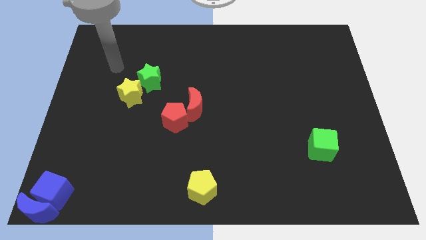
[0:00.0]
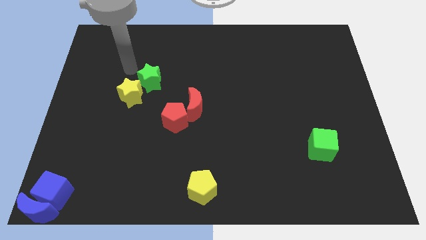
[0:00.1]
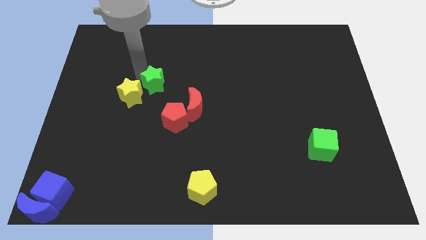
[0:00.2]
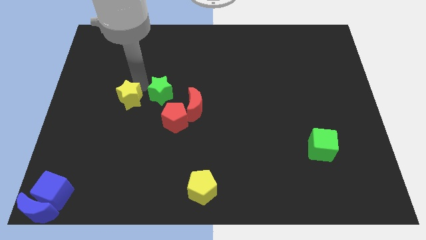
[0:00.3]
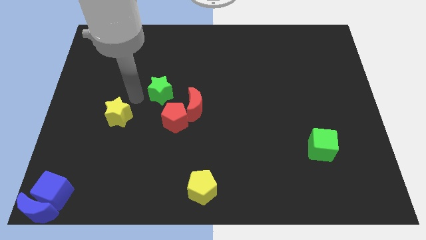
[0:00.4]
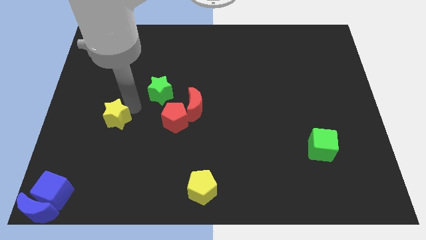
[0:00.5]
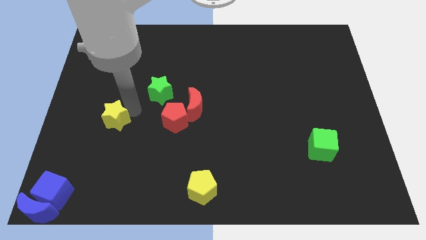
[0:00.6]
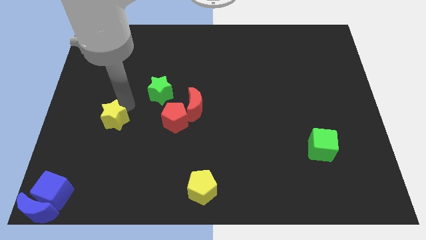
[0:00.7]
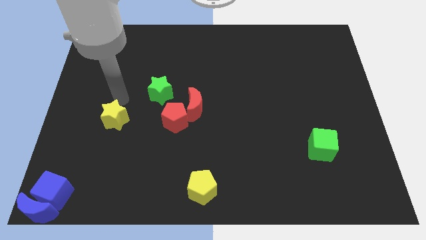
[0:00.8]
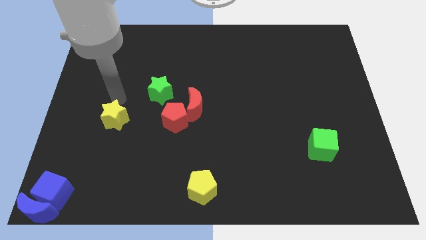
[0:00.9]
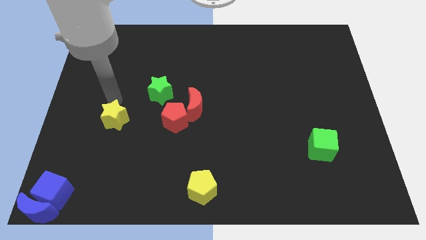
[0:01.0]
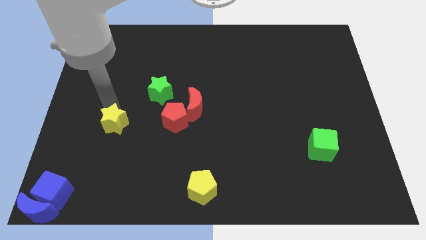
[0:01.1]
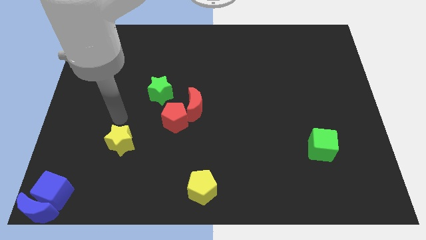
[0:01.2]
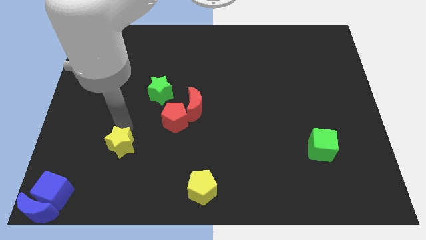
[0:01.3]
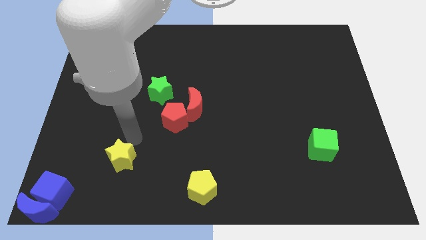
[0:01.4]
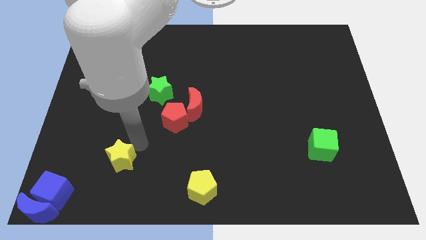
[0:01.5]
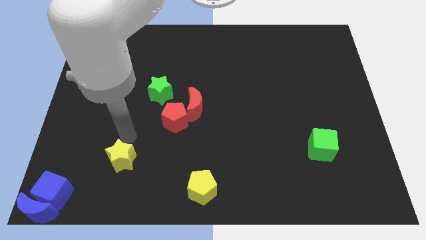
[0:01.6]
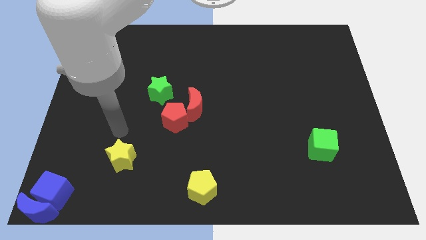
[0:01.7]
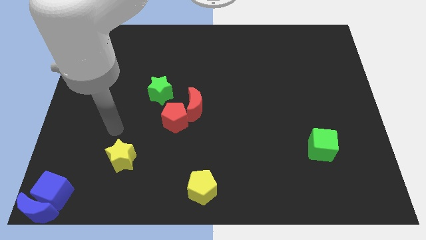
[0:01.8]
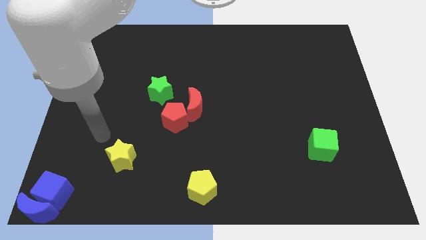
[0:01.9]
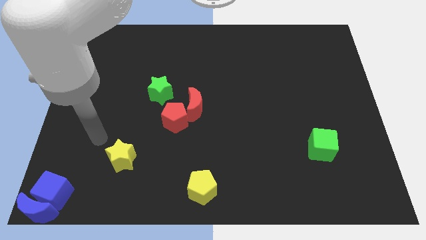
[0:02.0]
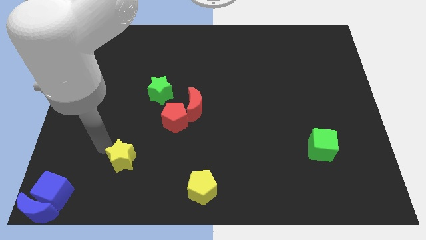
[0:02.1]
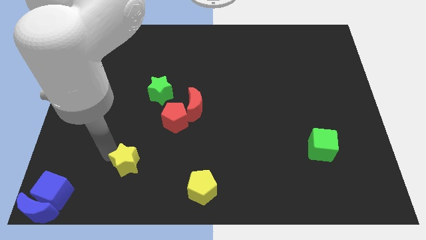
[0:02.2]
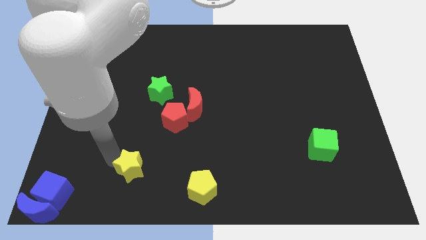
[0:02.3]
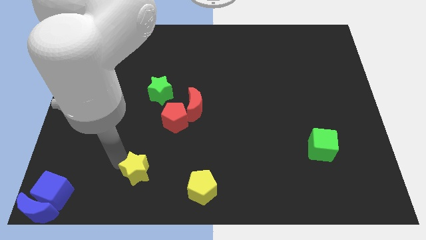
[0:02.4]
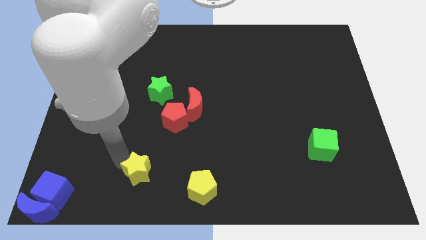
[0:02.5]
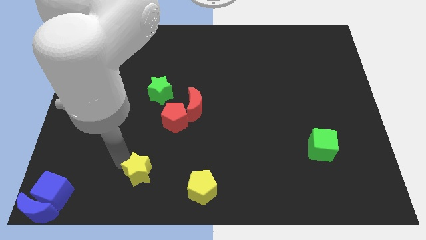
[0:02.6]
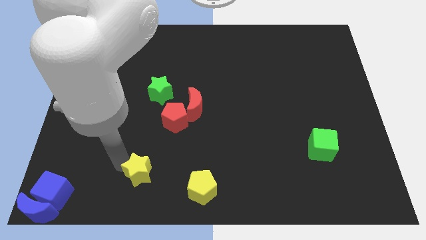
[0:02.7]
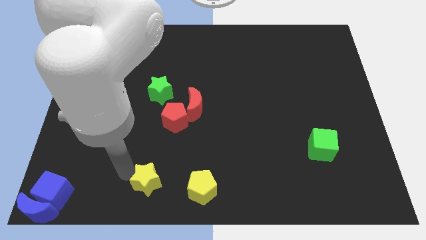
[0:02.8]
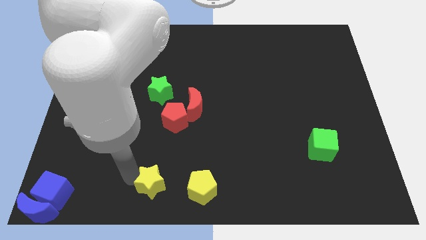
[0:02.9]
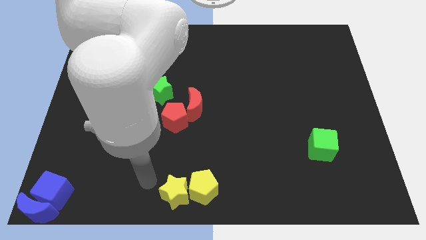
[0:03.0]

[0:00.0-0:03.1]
push the yellow star left to the yellow pentagon

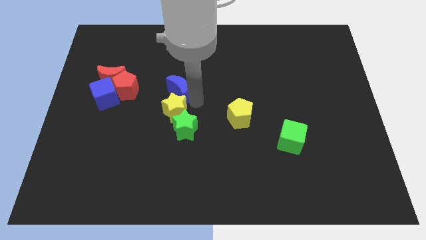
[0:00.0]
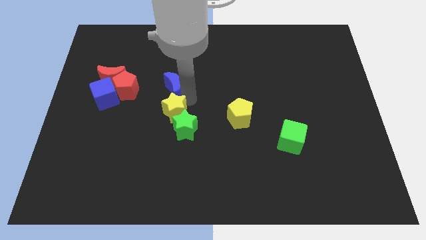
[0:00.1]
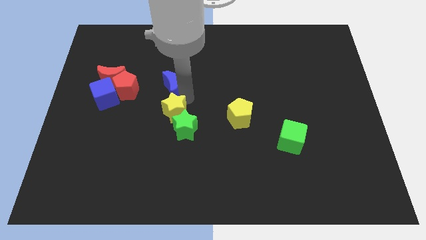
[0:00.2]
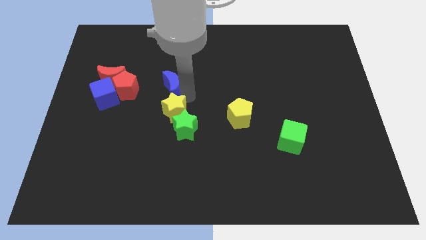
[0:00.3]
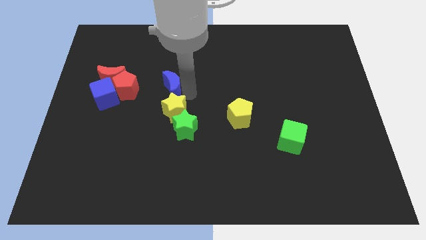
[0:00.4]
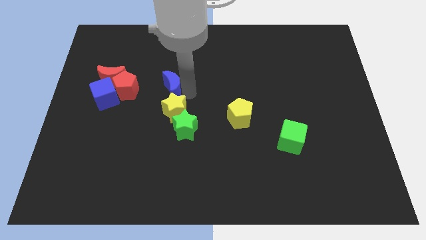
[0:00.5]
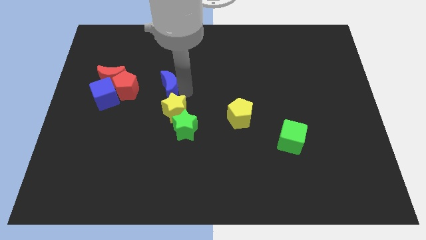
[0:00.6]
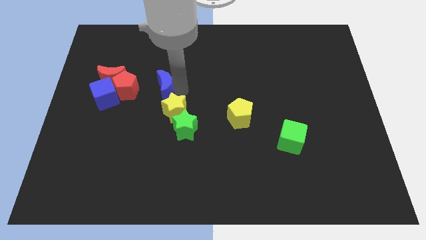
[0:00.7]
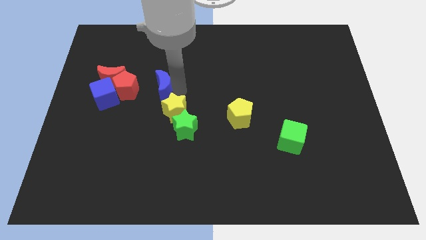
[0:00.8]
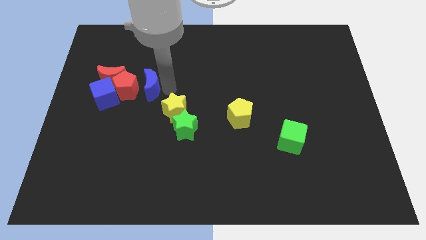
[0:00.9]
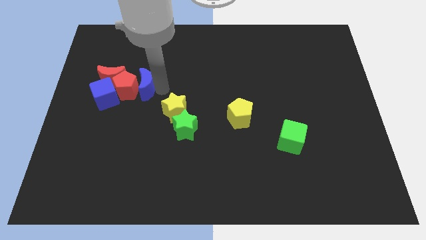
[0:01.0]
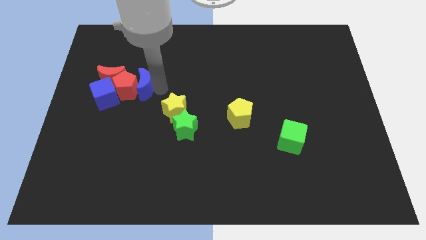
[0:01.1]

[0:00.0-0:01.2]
move the blue crescent close to the red pentagon

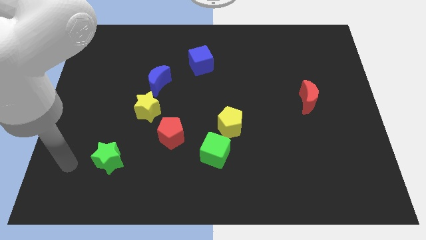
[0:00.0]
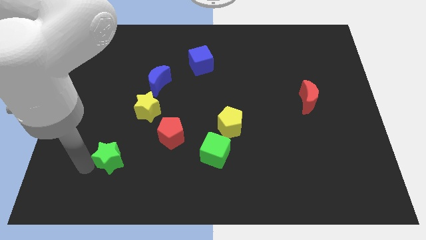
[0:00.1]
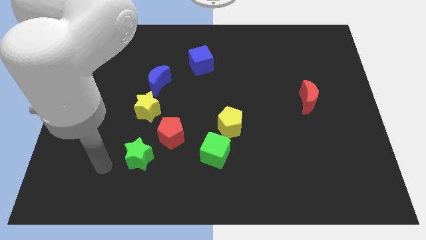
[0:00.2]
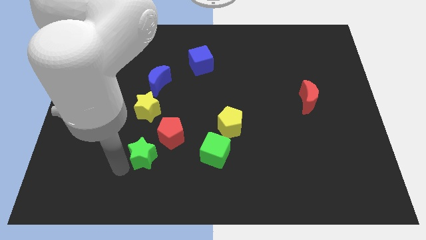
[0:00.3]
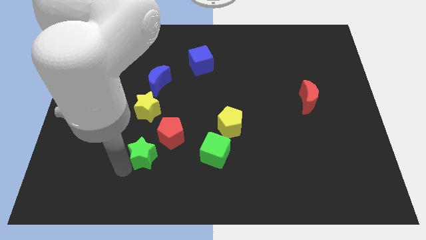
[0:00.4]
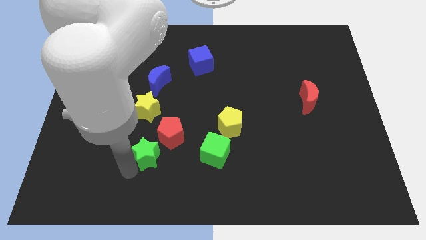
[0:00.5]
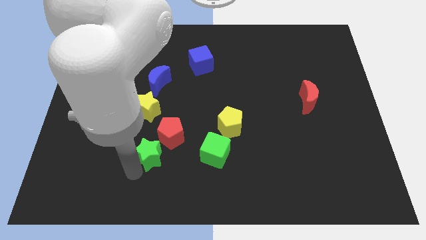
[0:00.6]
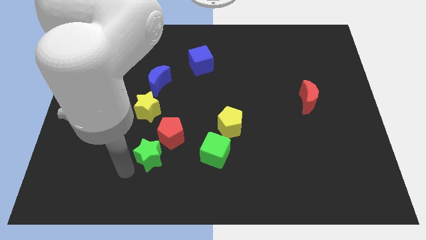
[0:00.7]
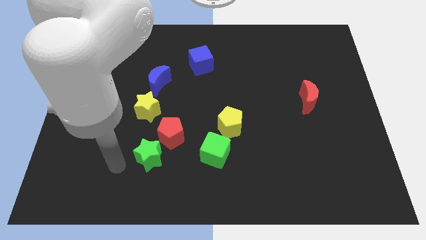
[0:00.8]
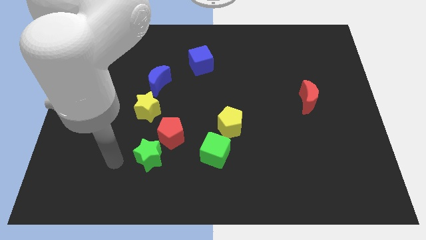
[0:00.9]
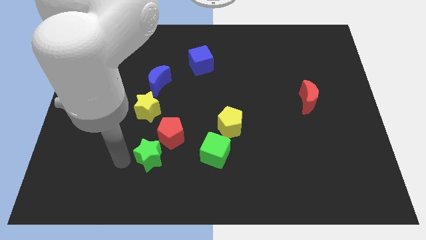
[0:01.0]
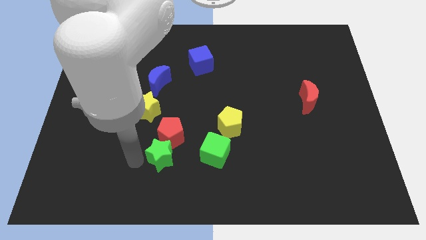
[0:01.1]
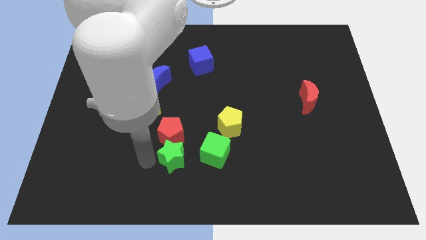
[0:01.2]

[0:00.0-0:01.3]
place green star to the bottom of red pentagon

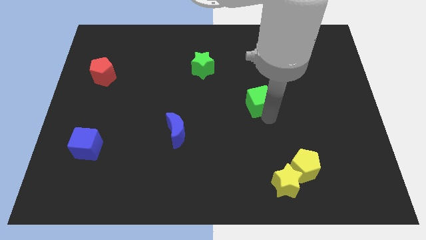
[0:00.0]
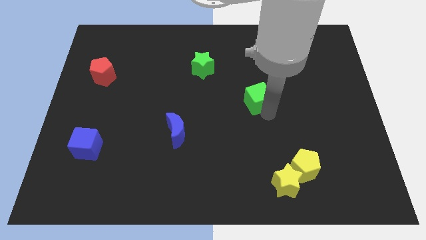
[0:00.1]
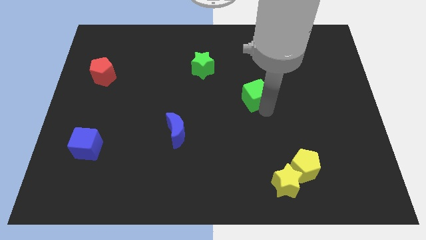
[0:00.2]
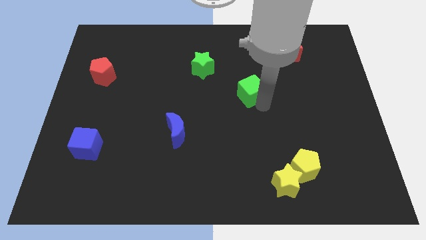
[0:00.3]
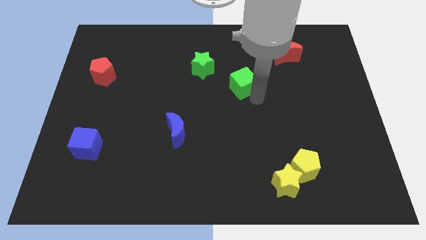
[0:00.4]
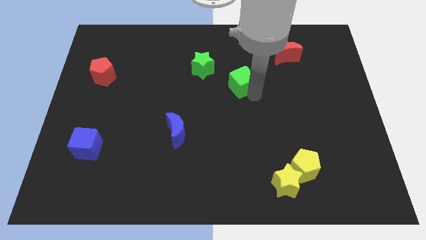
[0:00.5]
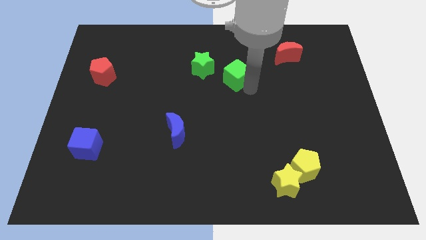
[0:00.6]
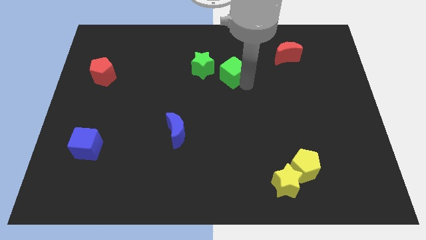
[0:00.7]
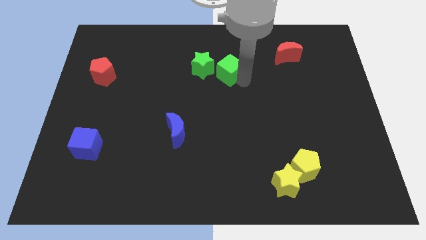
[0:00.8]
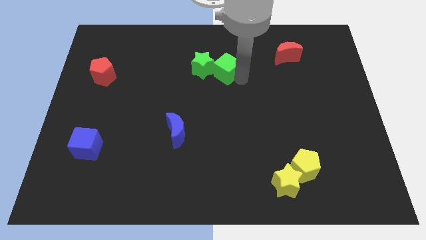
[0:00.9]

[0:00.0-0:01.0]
place the green cube to the right of the green star

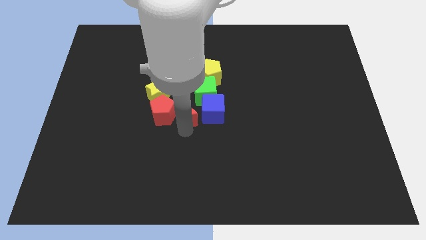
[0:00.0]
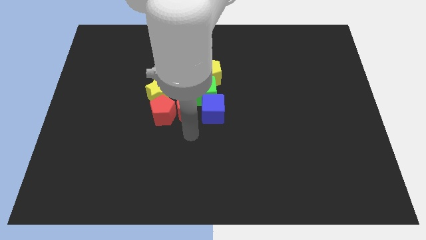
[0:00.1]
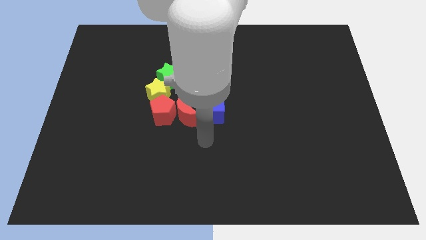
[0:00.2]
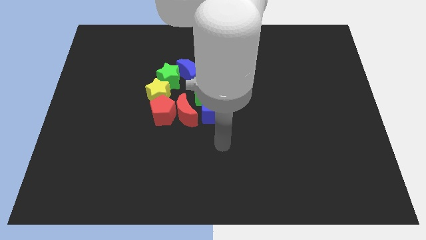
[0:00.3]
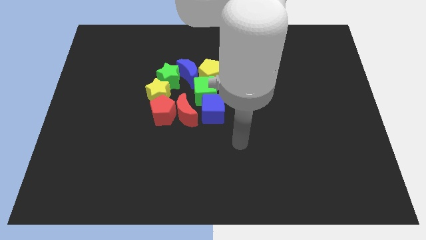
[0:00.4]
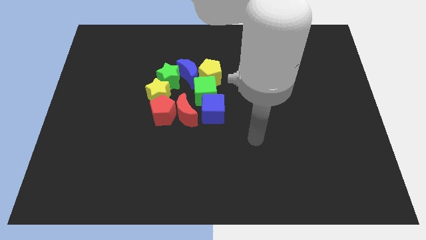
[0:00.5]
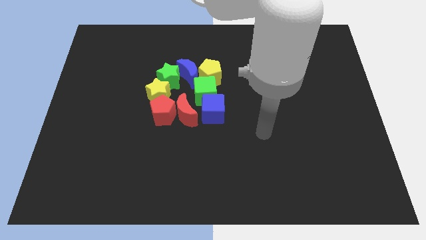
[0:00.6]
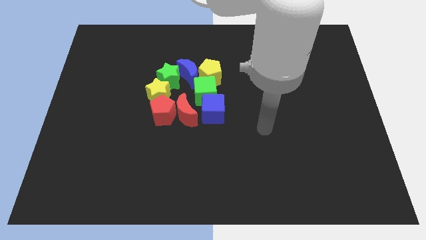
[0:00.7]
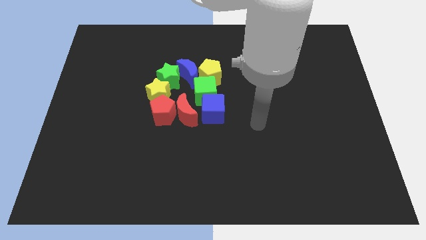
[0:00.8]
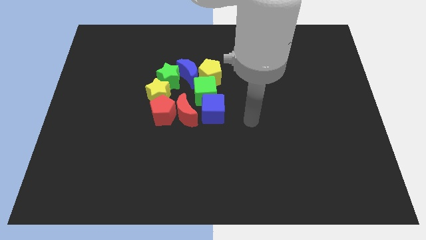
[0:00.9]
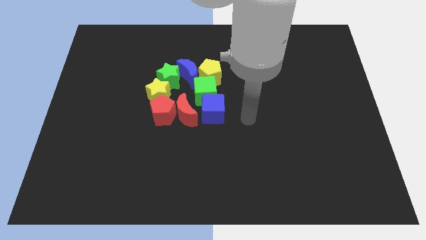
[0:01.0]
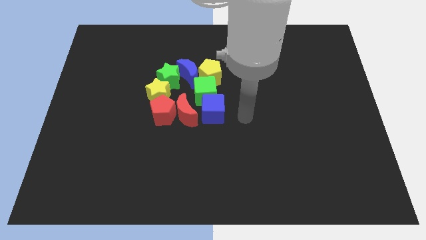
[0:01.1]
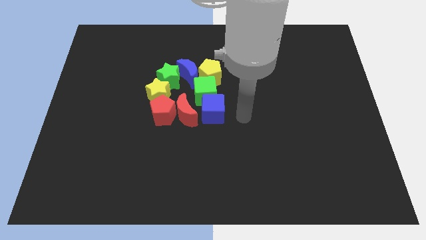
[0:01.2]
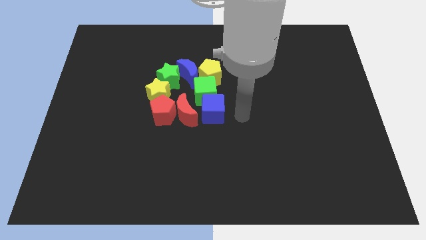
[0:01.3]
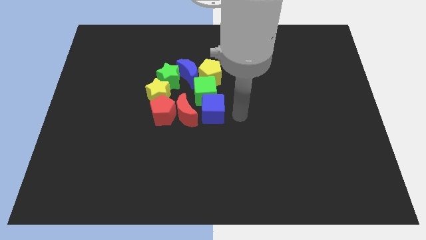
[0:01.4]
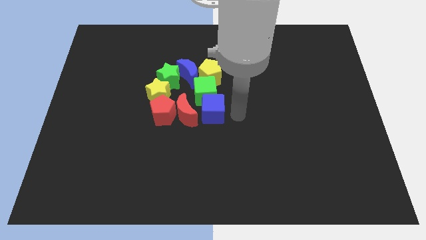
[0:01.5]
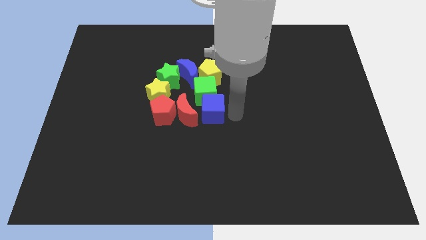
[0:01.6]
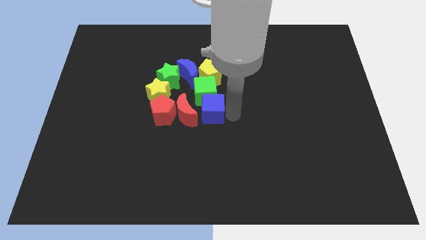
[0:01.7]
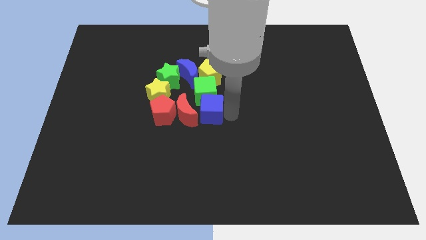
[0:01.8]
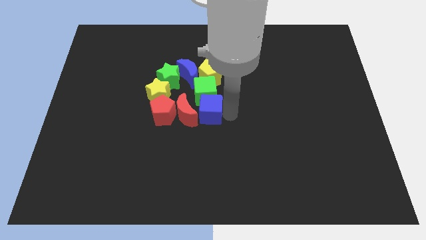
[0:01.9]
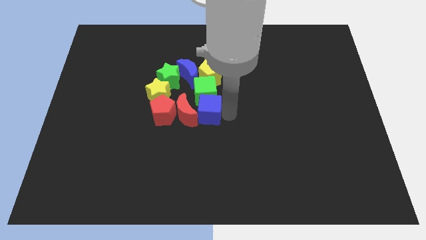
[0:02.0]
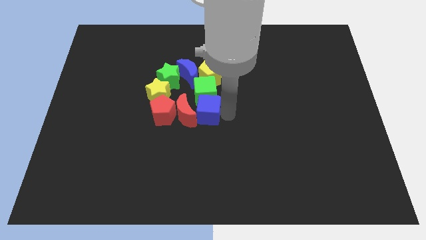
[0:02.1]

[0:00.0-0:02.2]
slightly push the blue cube into the right of the red crescent
